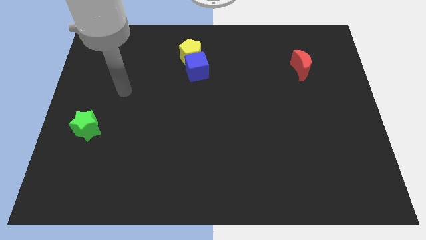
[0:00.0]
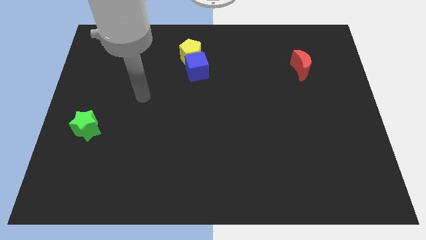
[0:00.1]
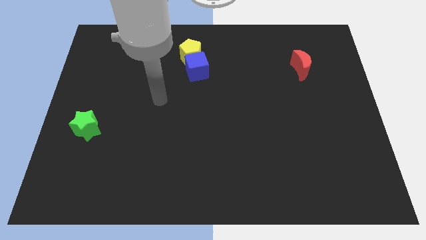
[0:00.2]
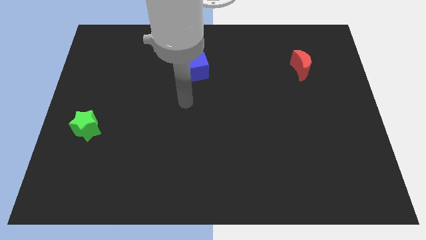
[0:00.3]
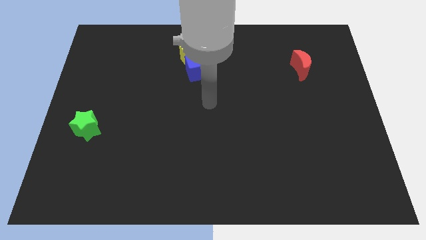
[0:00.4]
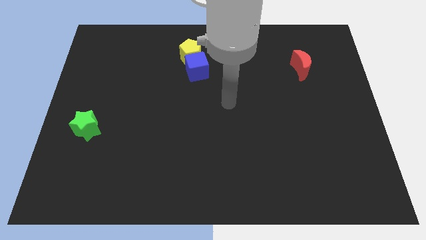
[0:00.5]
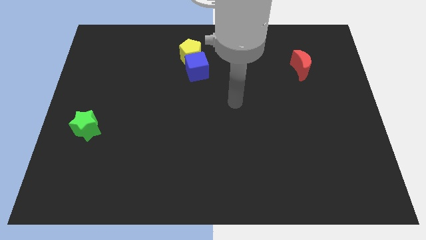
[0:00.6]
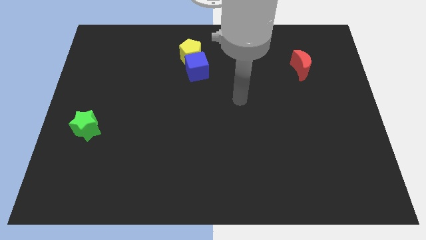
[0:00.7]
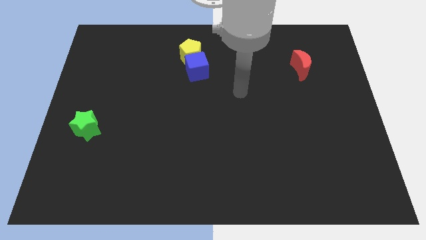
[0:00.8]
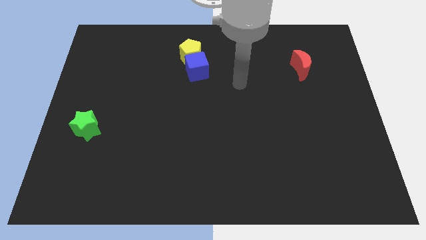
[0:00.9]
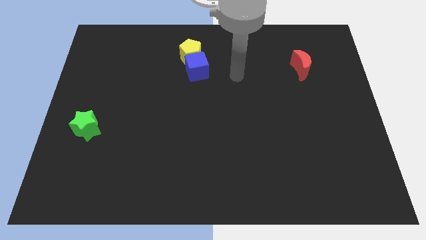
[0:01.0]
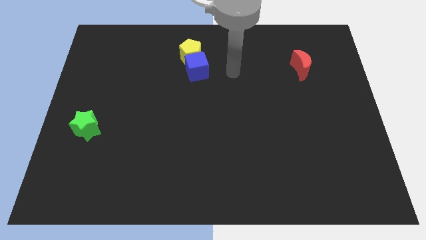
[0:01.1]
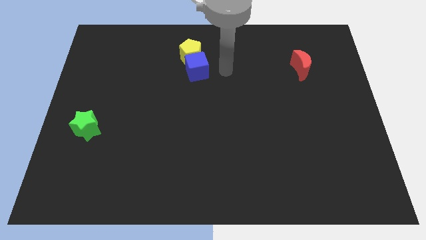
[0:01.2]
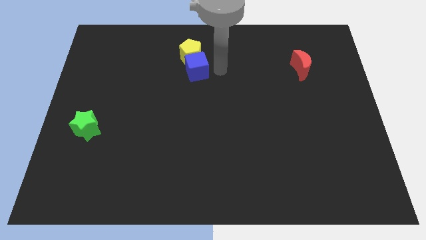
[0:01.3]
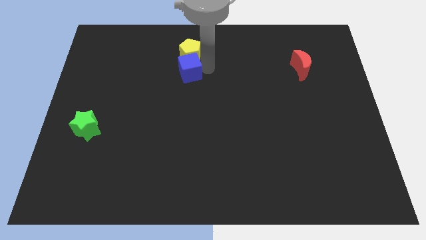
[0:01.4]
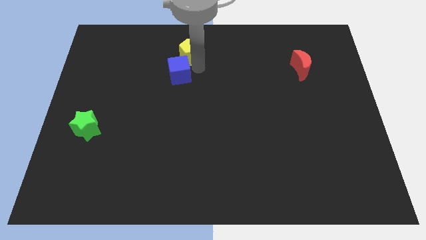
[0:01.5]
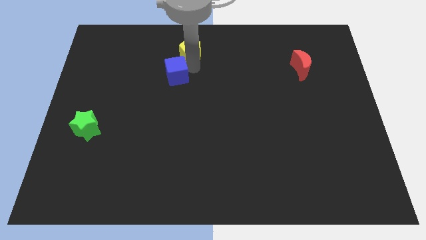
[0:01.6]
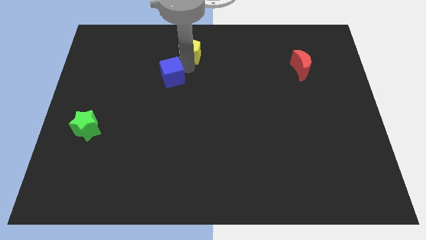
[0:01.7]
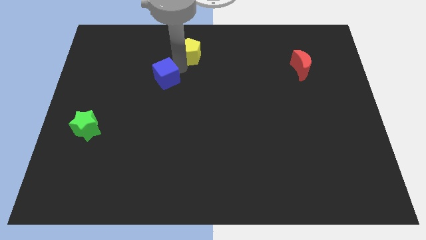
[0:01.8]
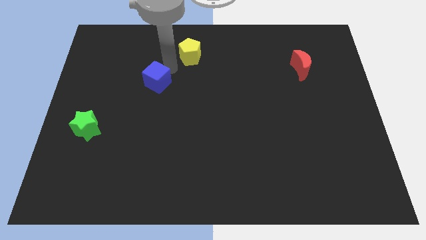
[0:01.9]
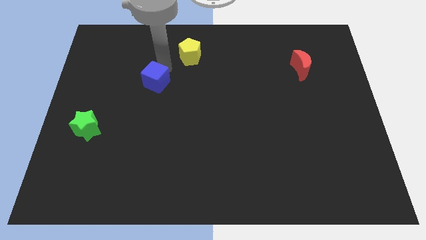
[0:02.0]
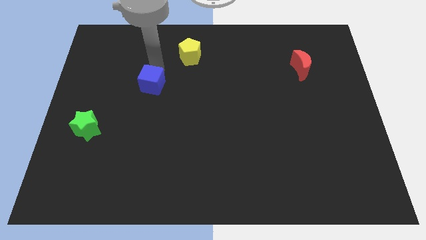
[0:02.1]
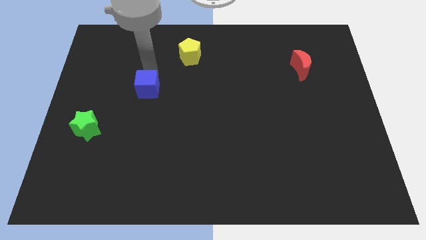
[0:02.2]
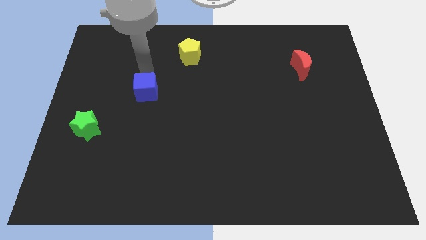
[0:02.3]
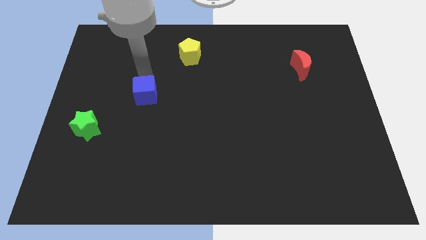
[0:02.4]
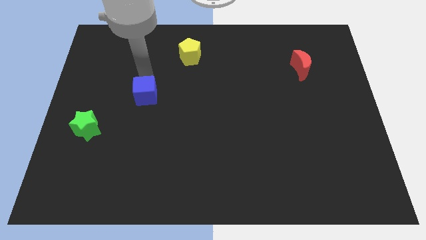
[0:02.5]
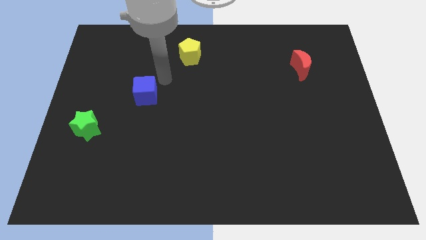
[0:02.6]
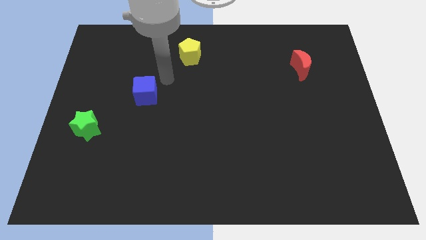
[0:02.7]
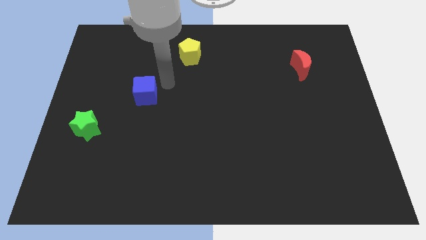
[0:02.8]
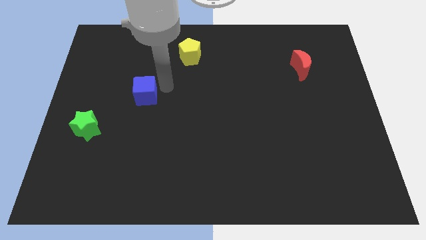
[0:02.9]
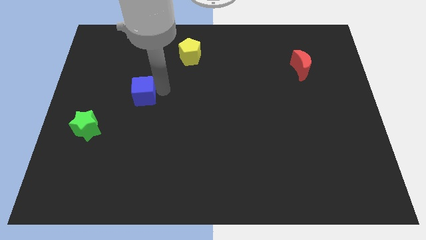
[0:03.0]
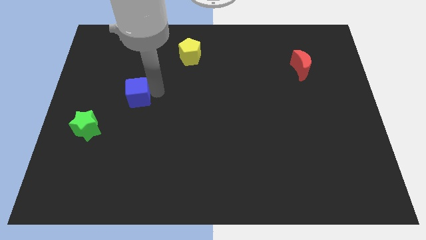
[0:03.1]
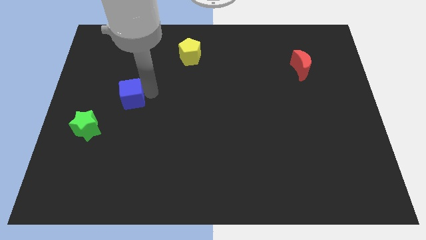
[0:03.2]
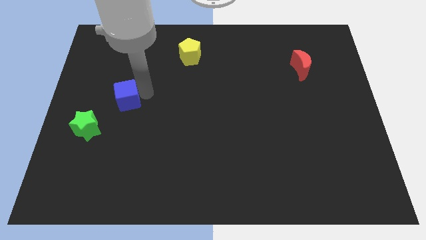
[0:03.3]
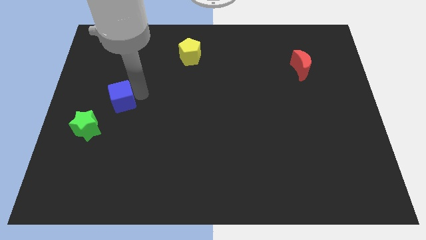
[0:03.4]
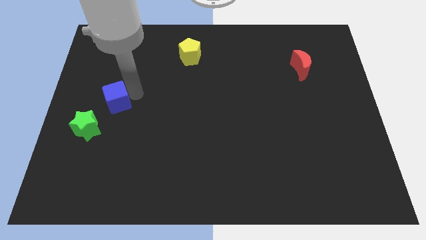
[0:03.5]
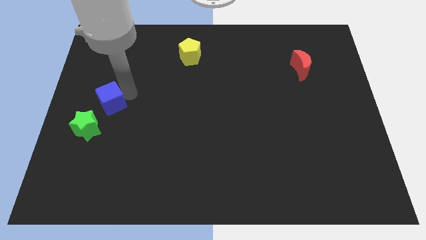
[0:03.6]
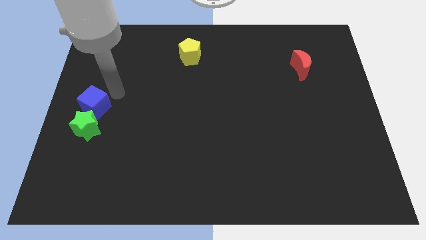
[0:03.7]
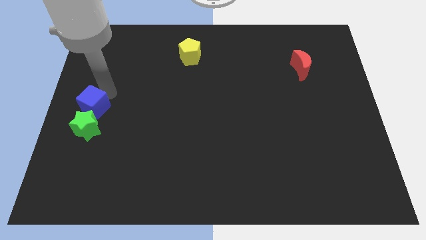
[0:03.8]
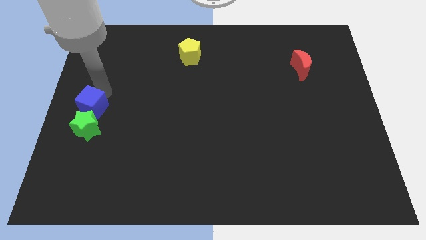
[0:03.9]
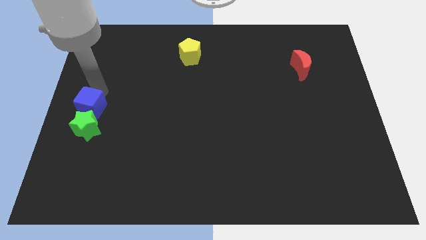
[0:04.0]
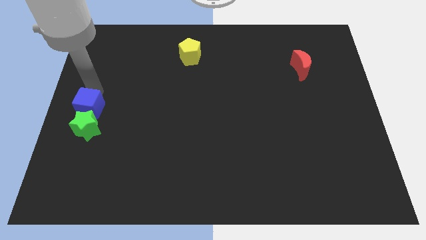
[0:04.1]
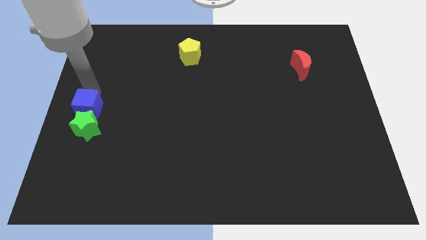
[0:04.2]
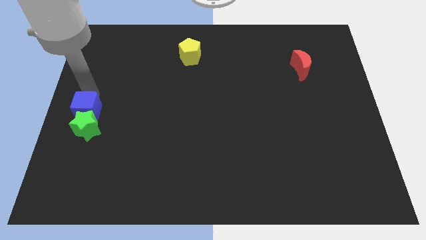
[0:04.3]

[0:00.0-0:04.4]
push the cube close to the green block

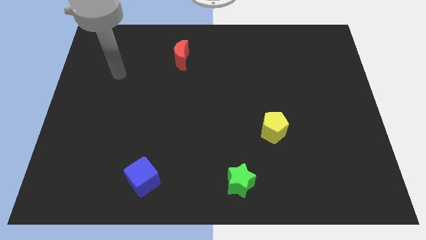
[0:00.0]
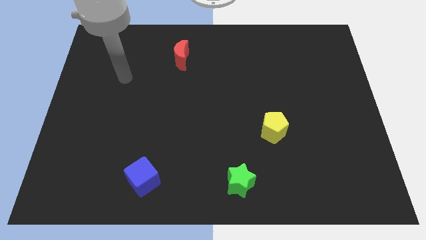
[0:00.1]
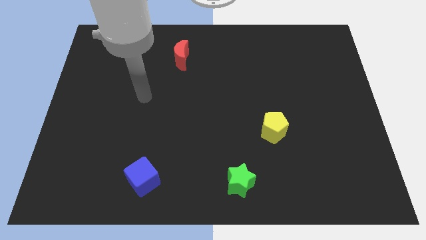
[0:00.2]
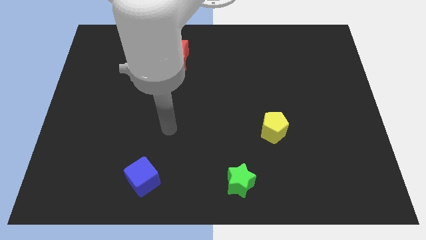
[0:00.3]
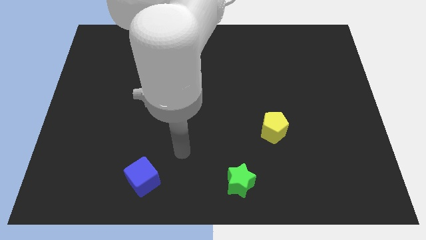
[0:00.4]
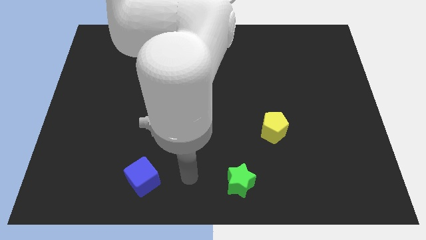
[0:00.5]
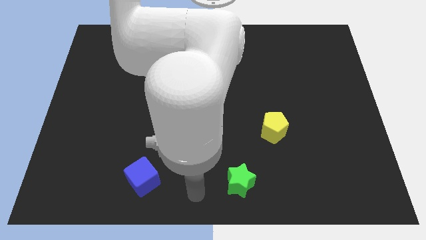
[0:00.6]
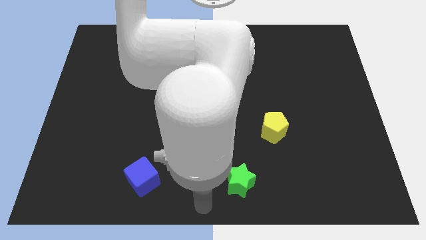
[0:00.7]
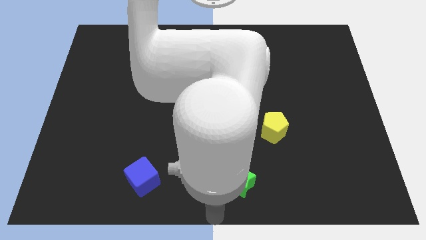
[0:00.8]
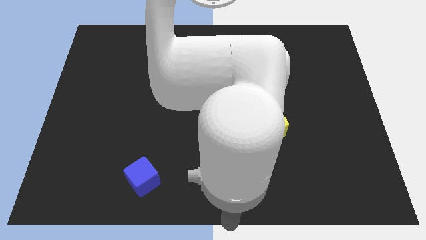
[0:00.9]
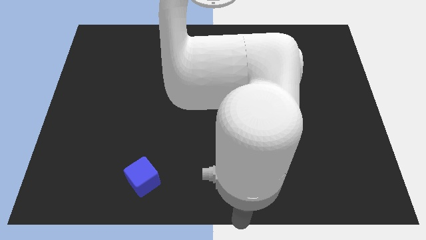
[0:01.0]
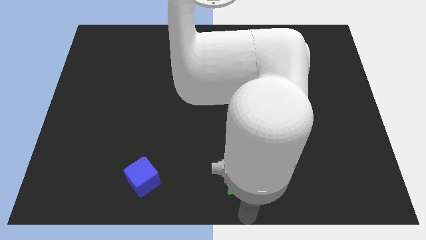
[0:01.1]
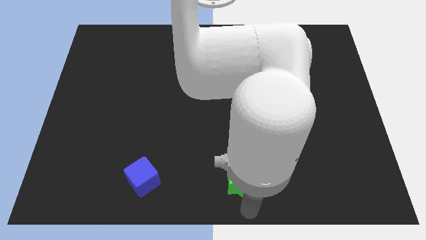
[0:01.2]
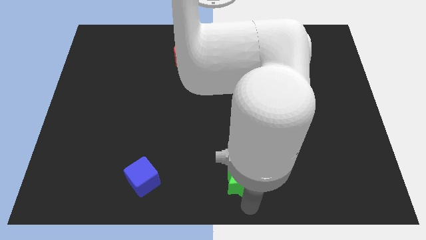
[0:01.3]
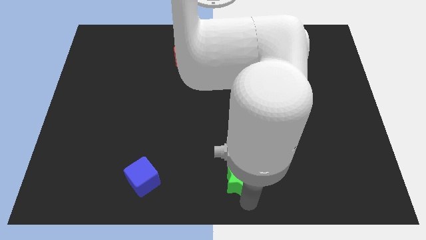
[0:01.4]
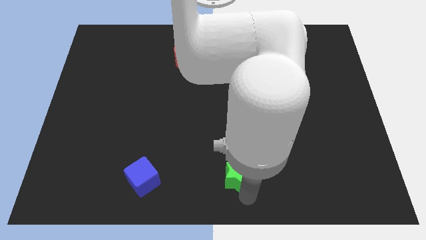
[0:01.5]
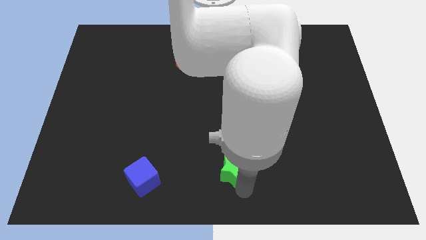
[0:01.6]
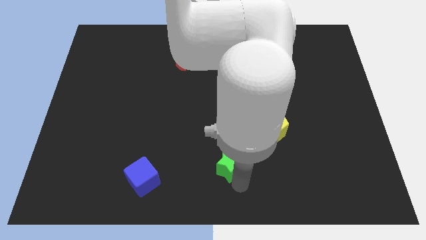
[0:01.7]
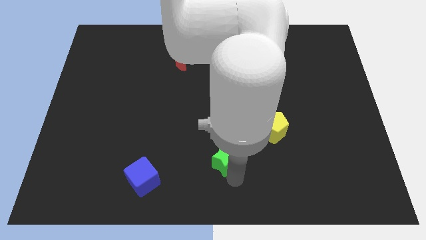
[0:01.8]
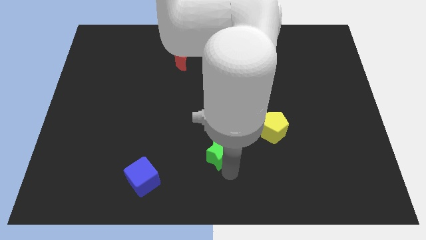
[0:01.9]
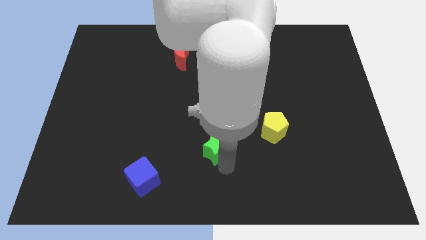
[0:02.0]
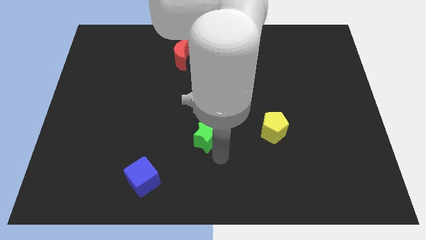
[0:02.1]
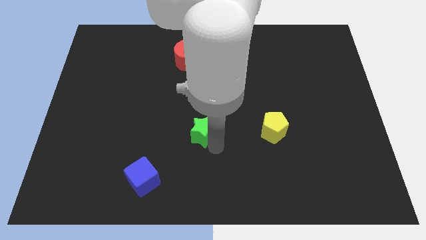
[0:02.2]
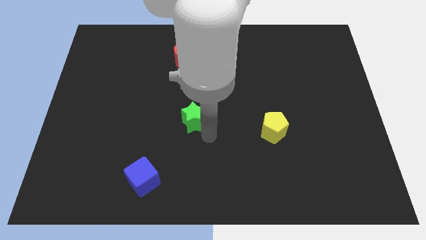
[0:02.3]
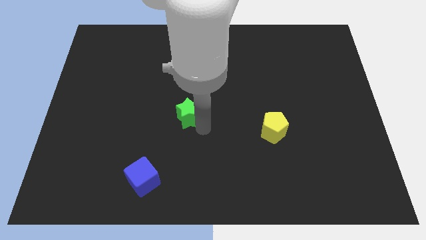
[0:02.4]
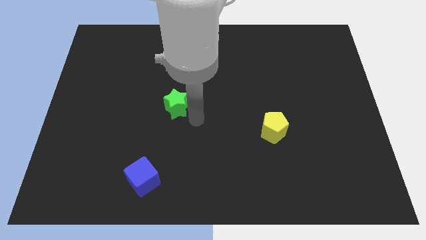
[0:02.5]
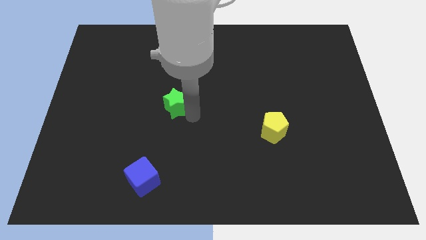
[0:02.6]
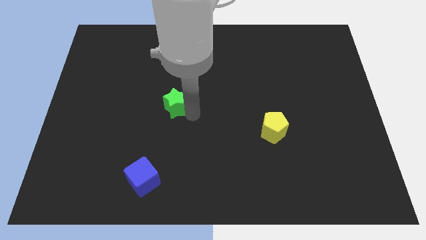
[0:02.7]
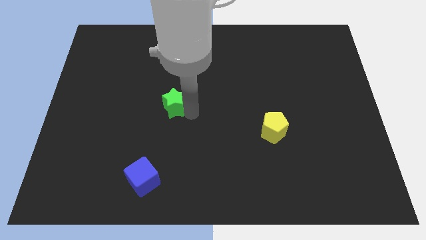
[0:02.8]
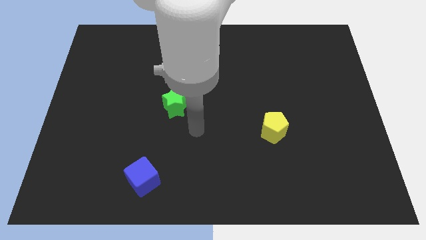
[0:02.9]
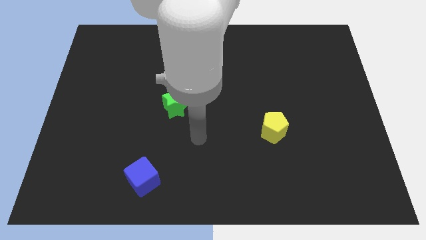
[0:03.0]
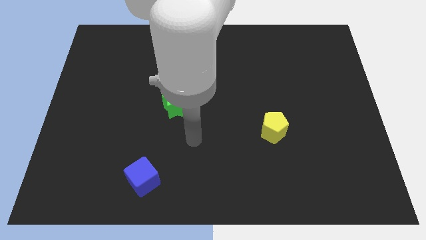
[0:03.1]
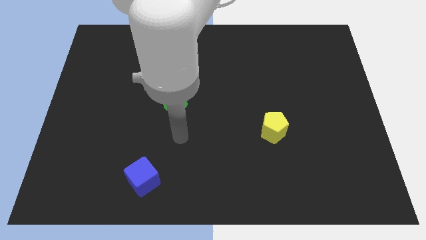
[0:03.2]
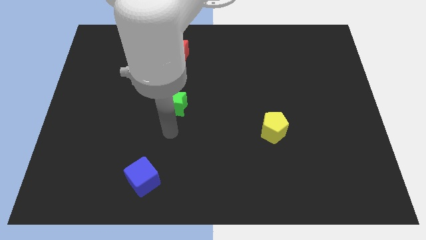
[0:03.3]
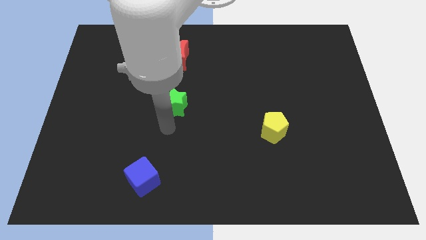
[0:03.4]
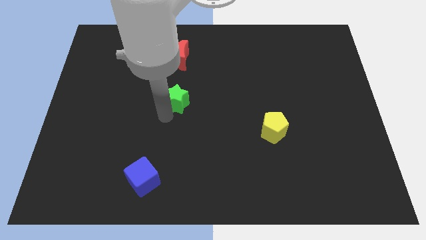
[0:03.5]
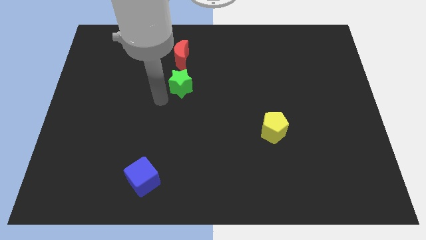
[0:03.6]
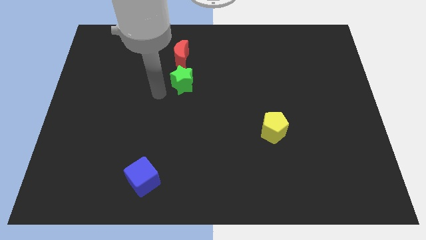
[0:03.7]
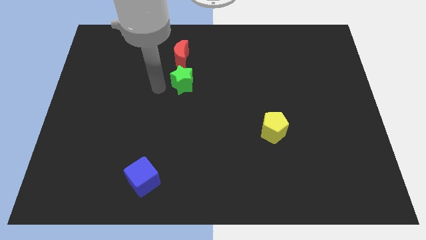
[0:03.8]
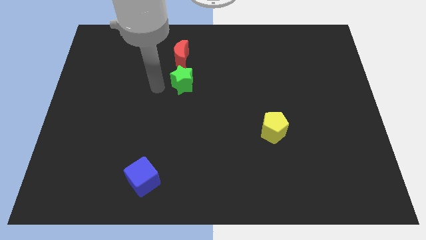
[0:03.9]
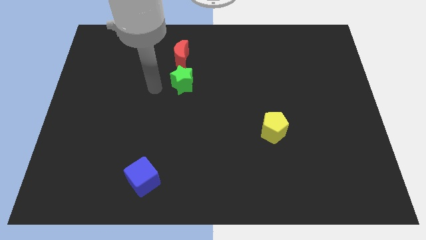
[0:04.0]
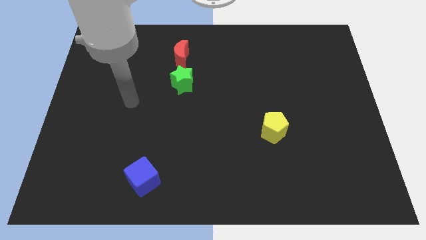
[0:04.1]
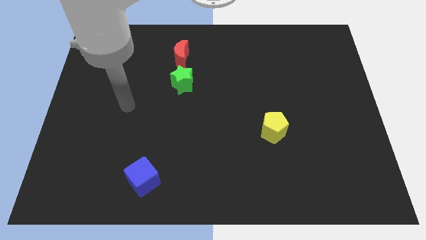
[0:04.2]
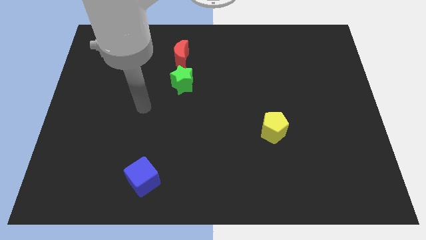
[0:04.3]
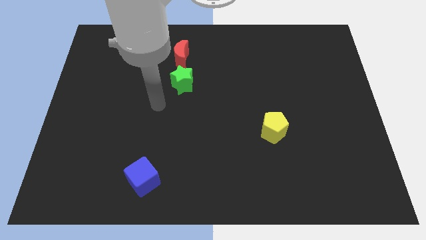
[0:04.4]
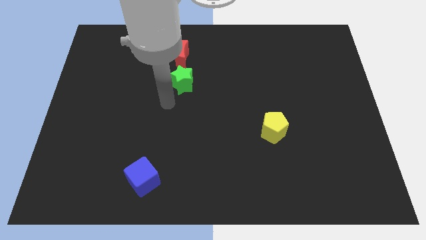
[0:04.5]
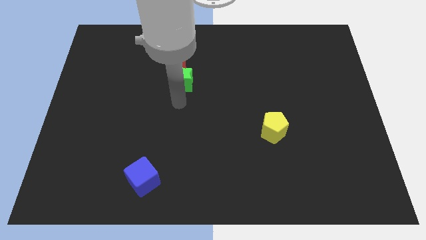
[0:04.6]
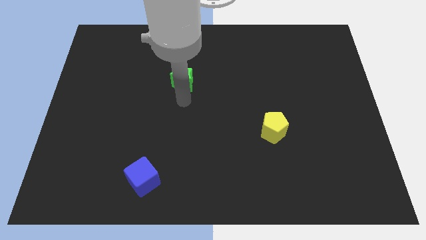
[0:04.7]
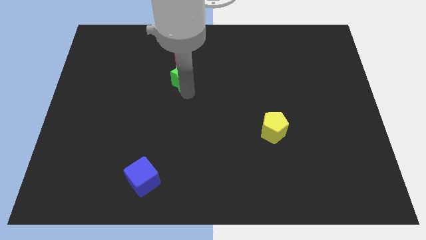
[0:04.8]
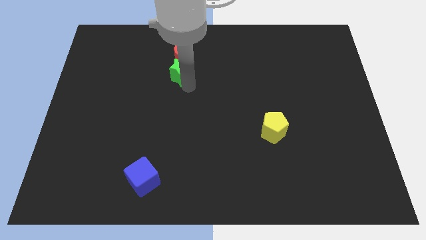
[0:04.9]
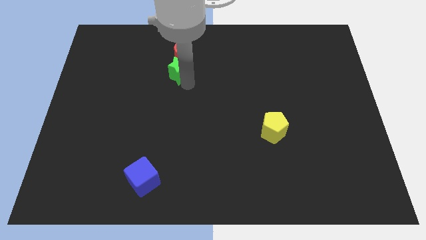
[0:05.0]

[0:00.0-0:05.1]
slide the green block close to the moon
